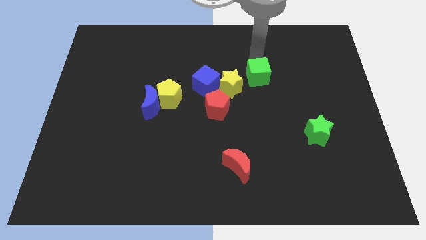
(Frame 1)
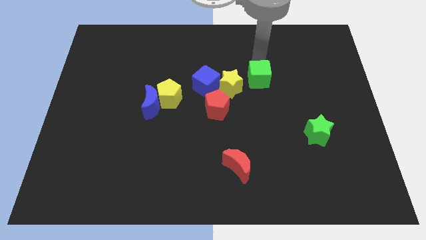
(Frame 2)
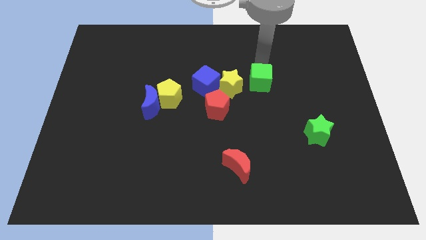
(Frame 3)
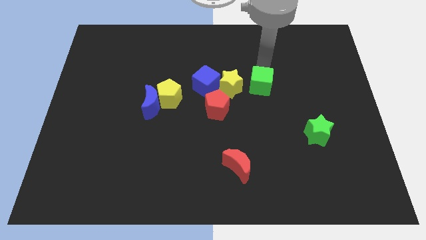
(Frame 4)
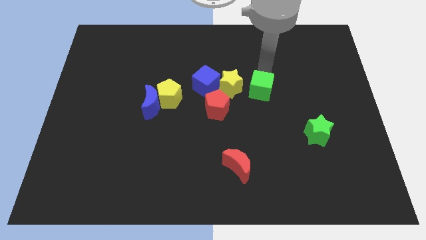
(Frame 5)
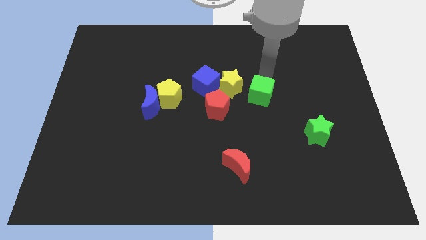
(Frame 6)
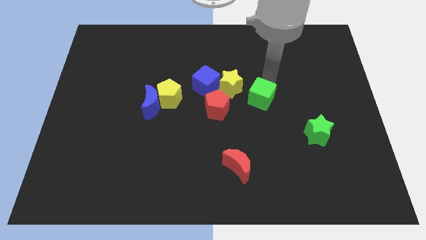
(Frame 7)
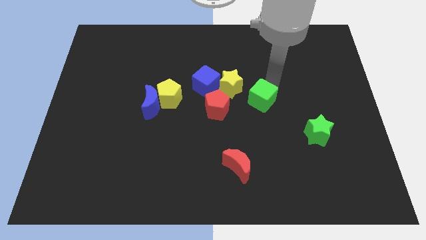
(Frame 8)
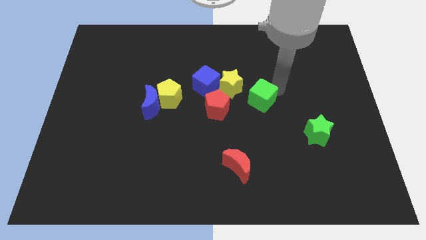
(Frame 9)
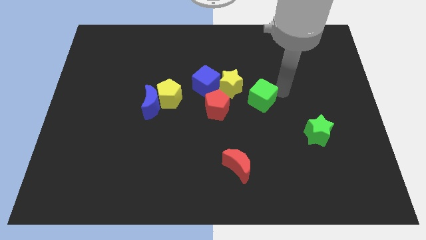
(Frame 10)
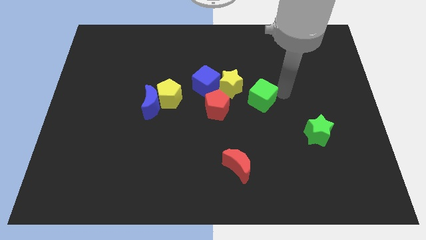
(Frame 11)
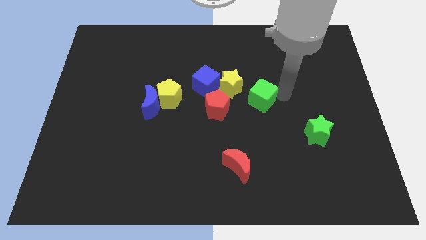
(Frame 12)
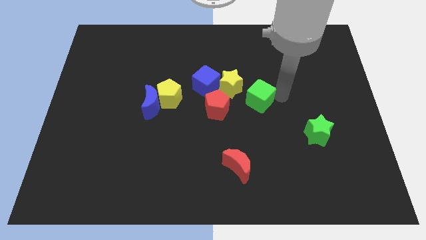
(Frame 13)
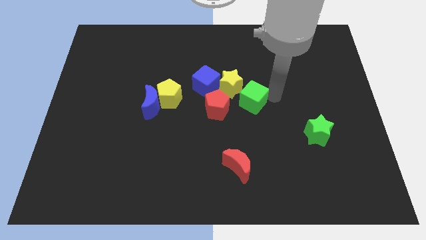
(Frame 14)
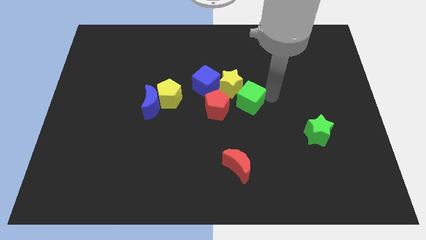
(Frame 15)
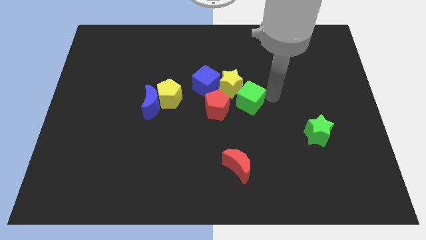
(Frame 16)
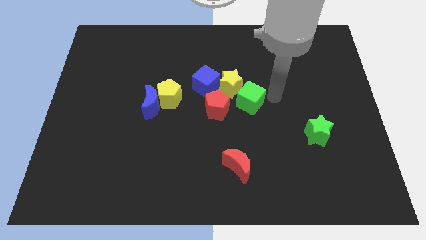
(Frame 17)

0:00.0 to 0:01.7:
move the green cube close to the right side of the yellow star

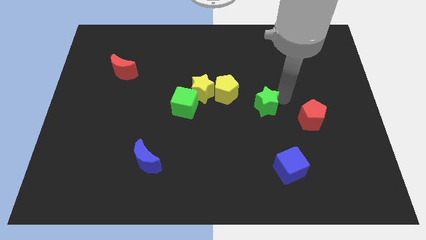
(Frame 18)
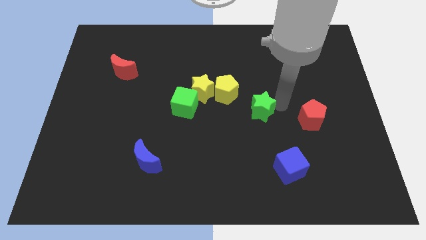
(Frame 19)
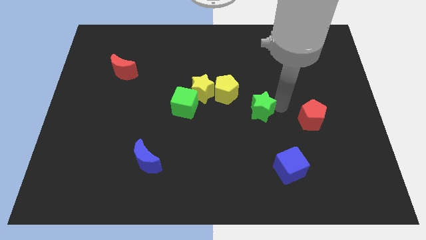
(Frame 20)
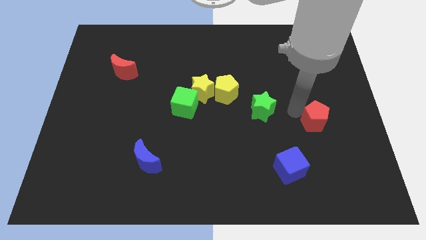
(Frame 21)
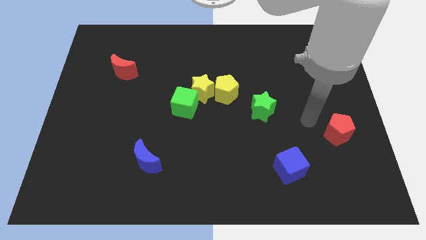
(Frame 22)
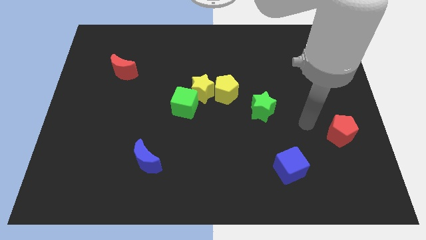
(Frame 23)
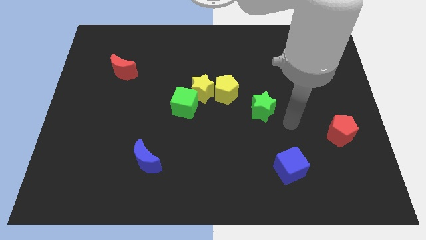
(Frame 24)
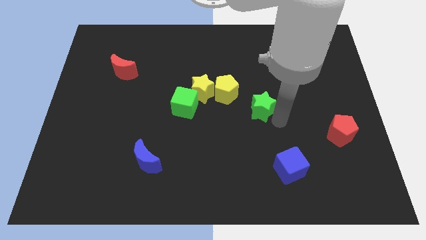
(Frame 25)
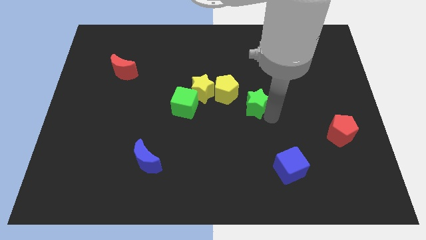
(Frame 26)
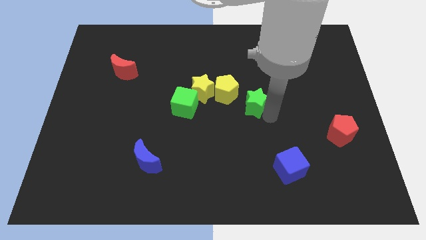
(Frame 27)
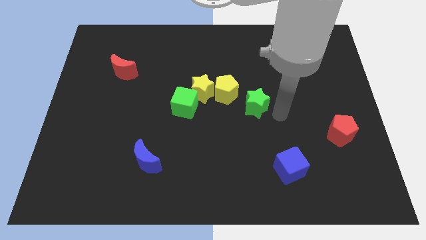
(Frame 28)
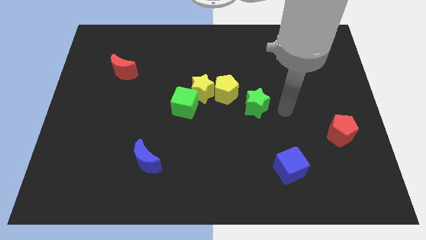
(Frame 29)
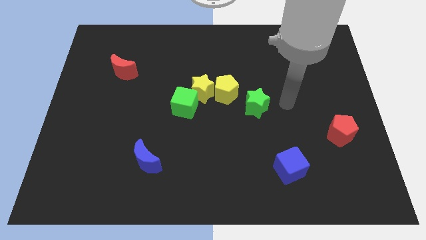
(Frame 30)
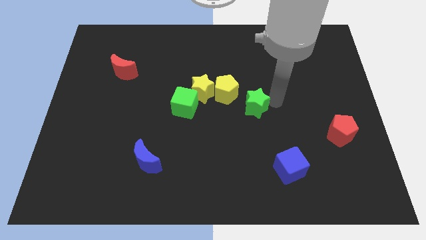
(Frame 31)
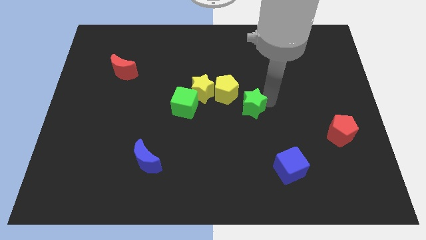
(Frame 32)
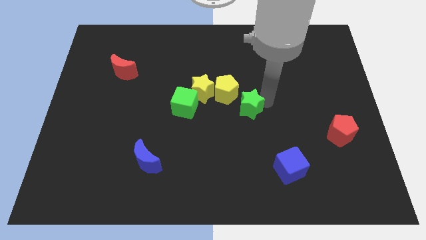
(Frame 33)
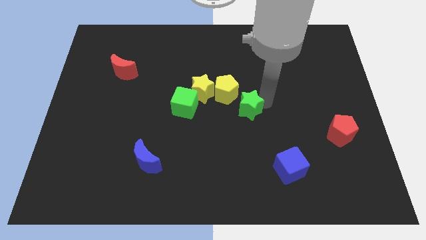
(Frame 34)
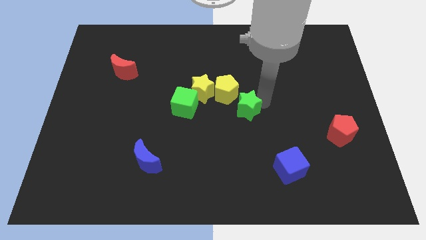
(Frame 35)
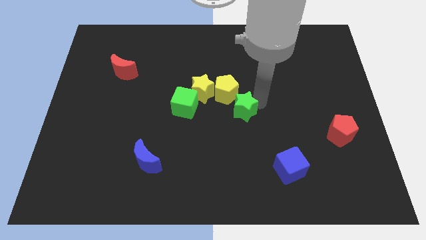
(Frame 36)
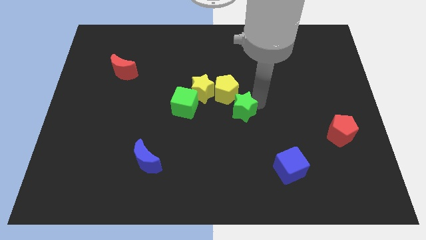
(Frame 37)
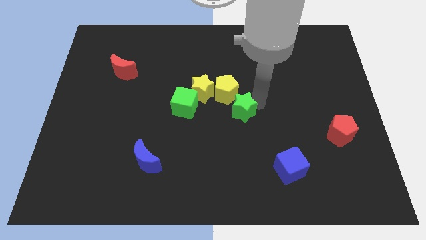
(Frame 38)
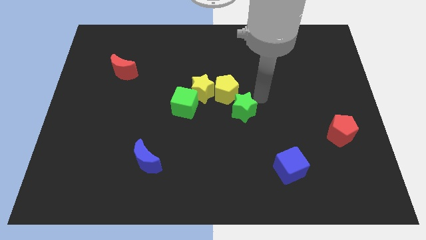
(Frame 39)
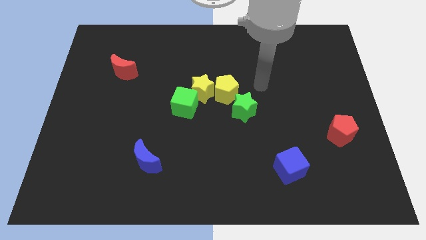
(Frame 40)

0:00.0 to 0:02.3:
separate the green star and red pentagon from each other

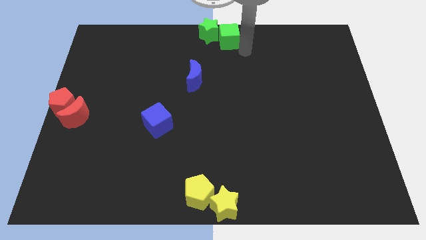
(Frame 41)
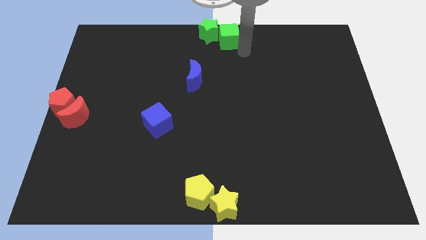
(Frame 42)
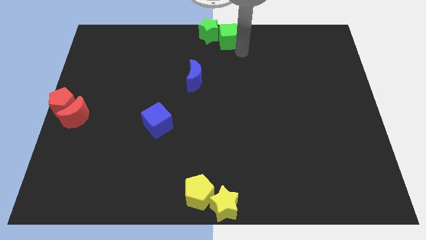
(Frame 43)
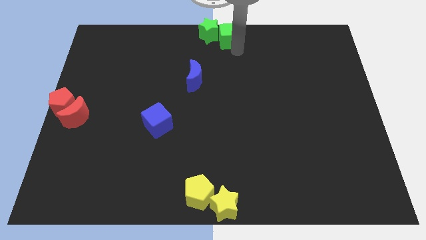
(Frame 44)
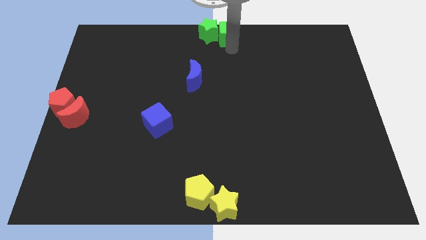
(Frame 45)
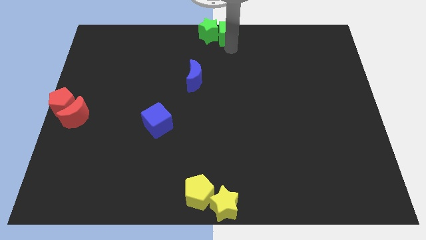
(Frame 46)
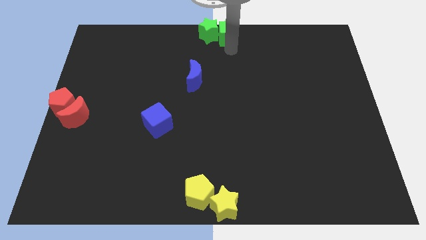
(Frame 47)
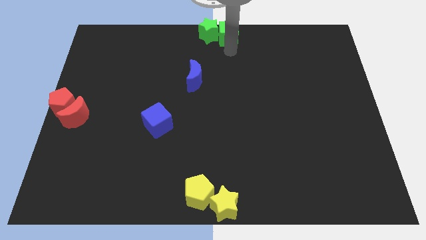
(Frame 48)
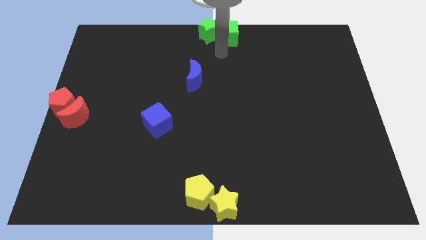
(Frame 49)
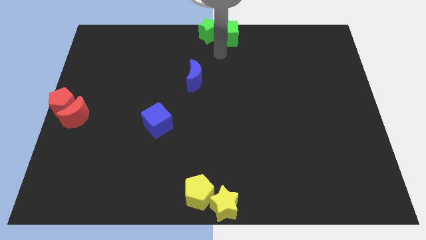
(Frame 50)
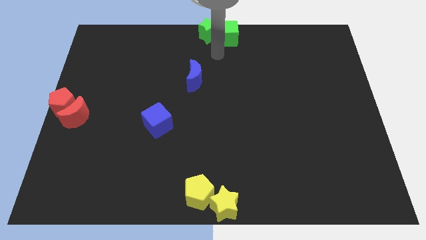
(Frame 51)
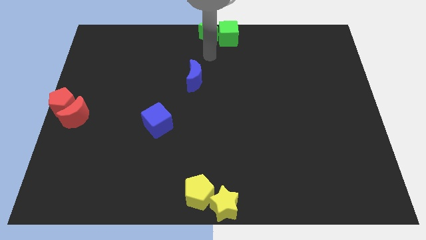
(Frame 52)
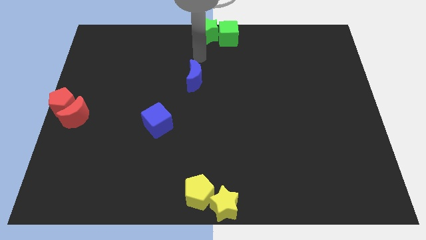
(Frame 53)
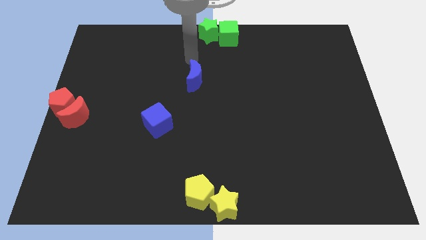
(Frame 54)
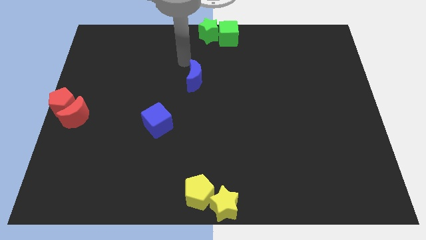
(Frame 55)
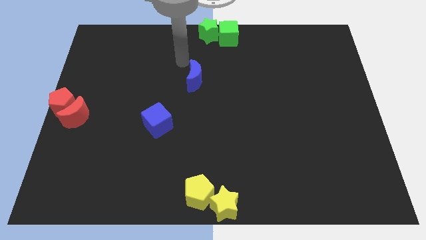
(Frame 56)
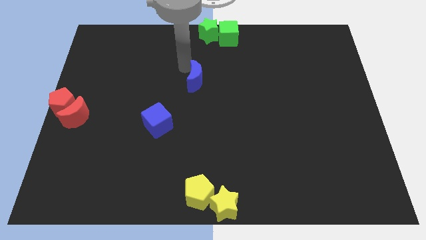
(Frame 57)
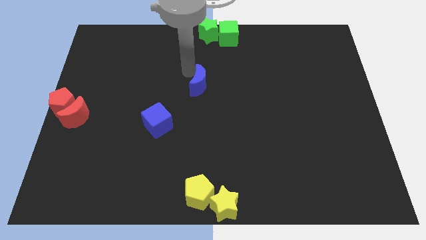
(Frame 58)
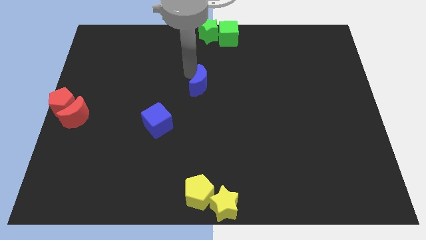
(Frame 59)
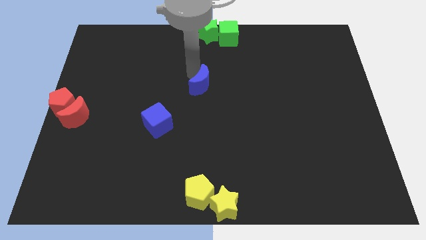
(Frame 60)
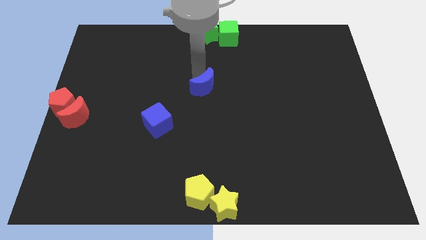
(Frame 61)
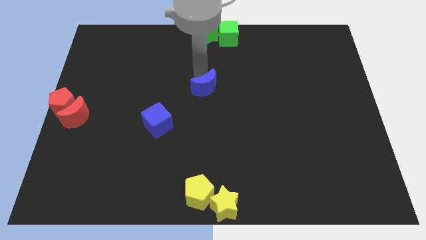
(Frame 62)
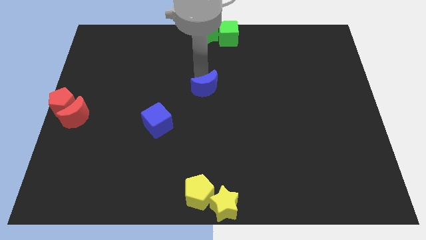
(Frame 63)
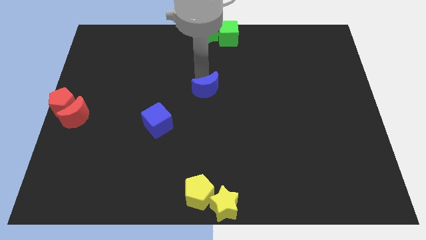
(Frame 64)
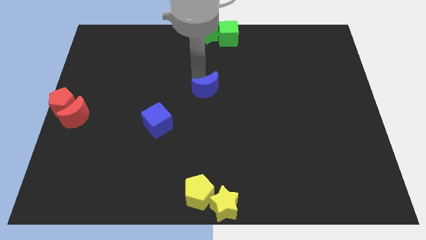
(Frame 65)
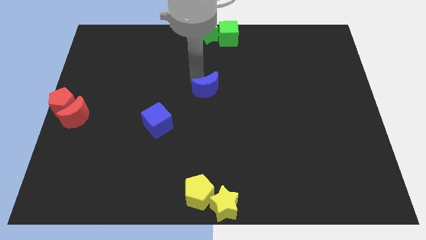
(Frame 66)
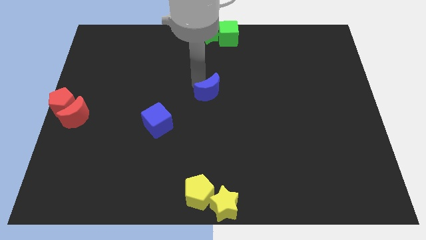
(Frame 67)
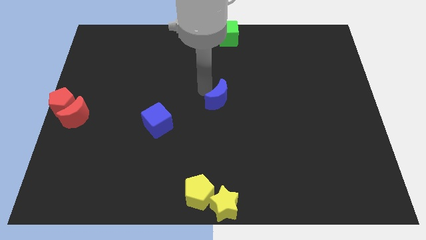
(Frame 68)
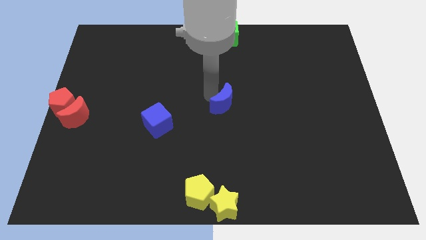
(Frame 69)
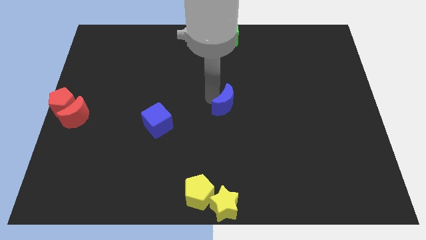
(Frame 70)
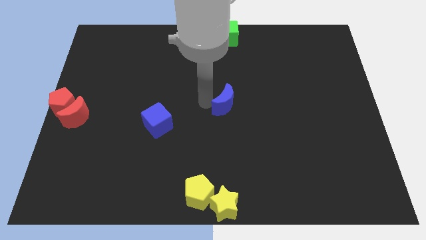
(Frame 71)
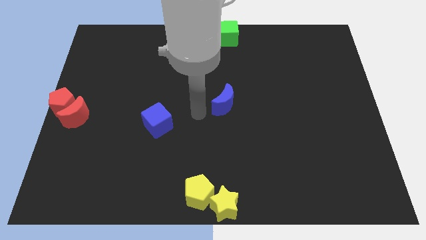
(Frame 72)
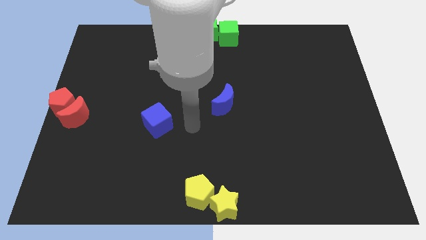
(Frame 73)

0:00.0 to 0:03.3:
slide the blue moon to the center of the board

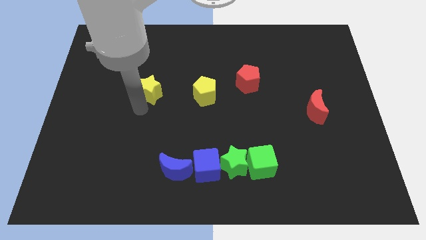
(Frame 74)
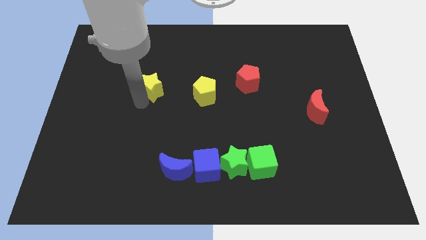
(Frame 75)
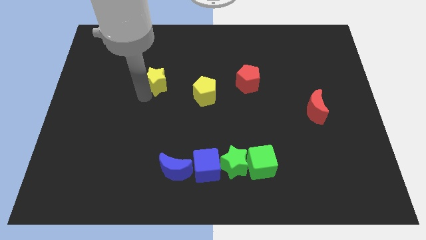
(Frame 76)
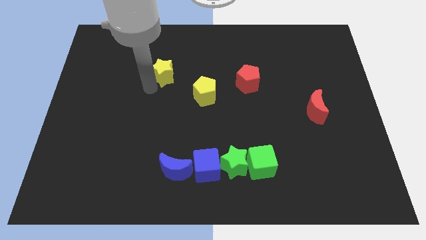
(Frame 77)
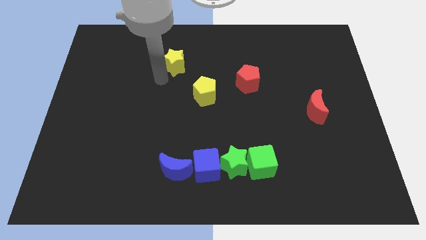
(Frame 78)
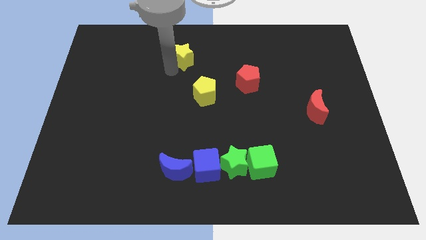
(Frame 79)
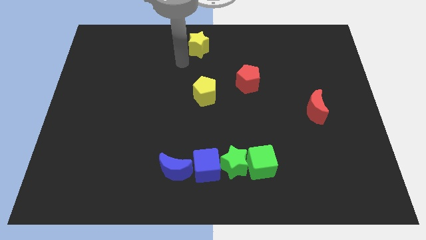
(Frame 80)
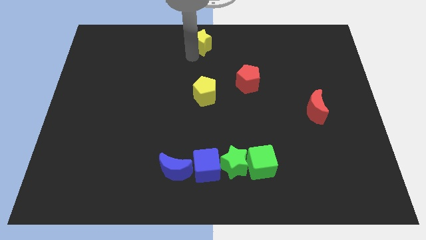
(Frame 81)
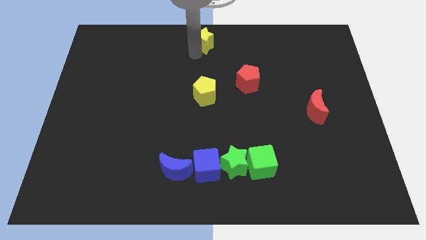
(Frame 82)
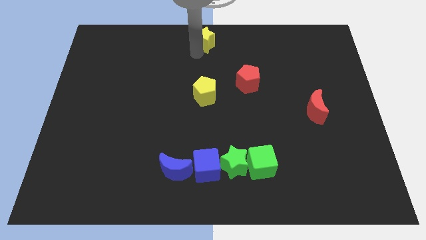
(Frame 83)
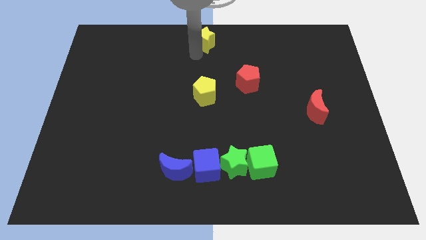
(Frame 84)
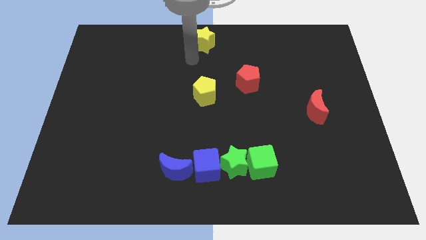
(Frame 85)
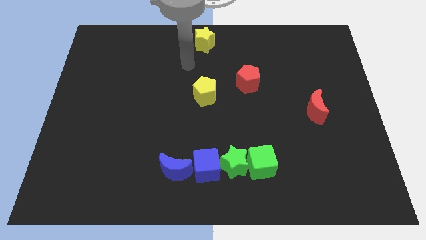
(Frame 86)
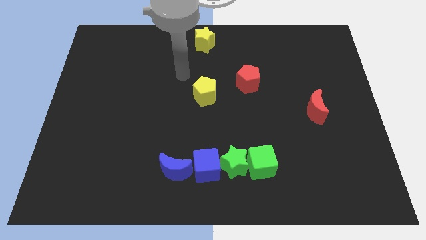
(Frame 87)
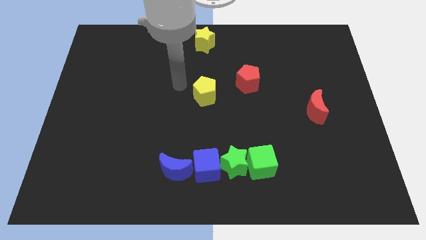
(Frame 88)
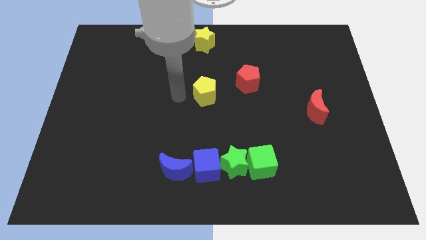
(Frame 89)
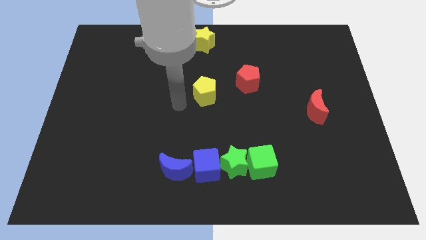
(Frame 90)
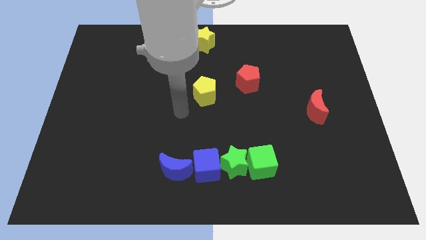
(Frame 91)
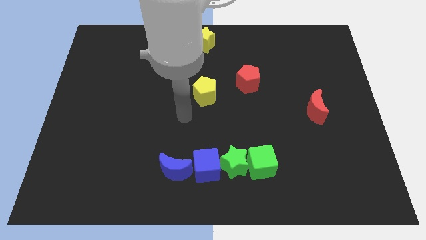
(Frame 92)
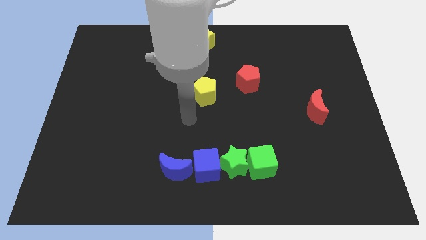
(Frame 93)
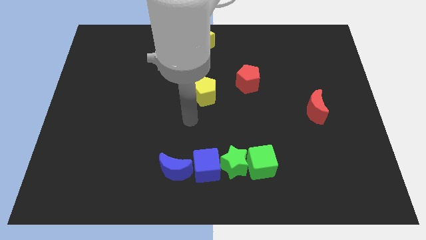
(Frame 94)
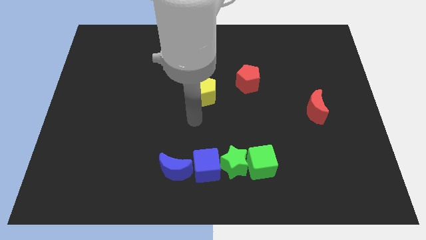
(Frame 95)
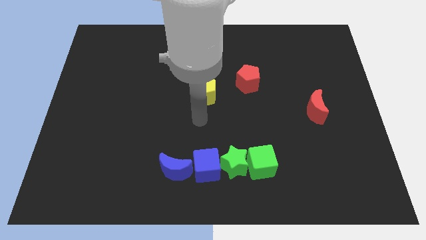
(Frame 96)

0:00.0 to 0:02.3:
move the yellow star to the top center of the board
